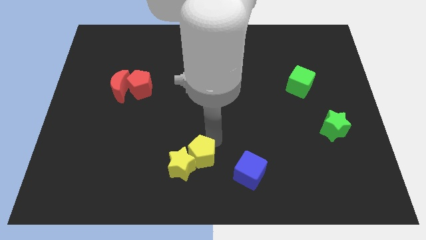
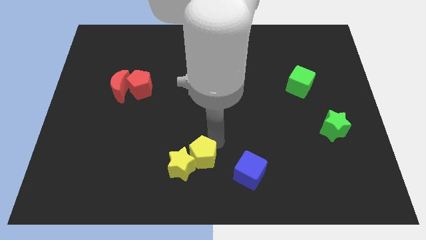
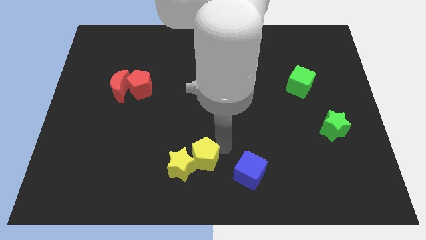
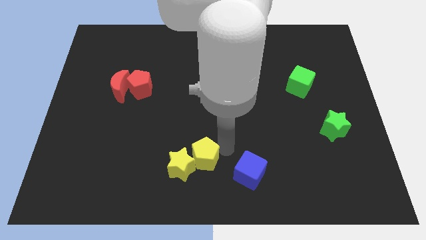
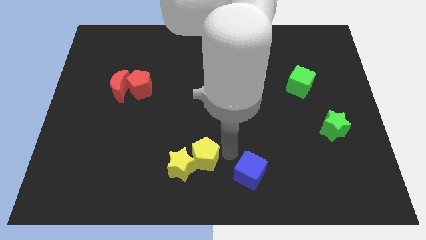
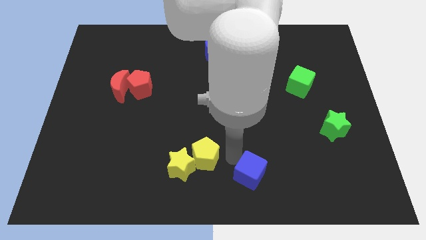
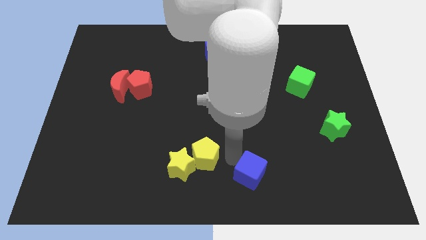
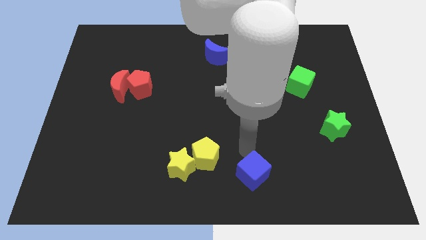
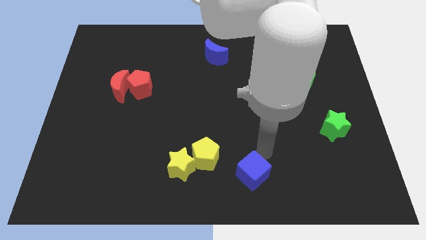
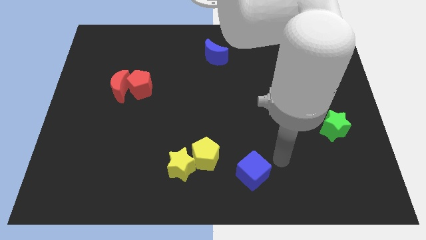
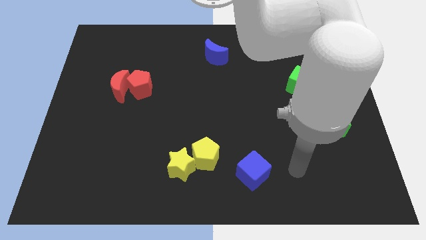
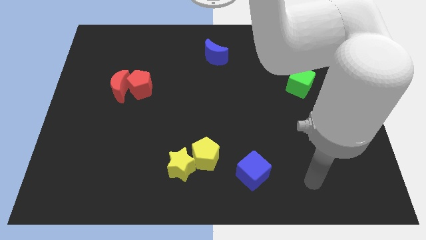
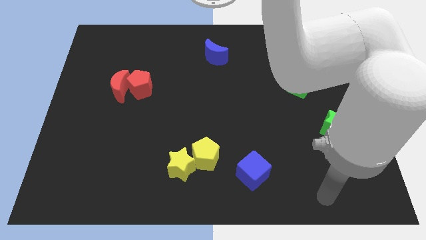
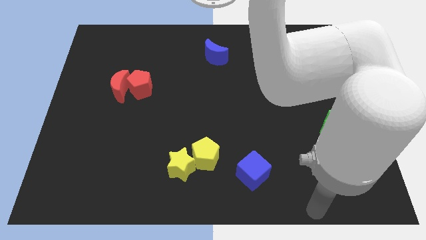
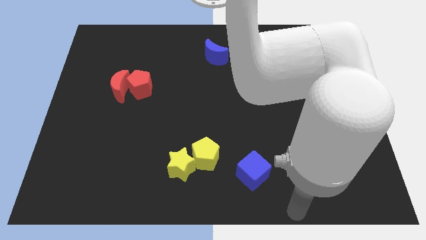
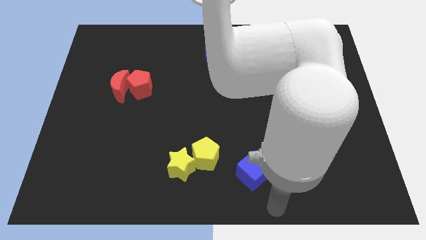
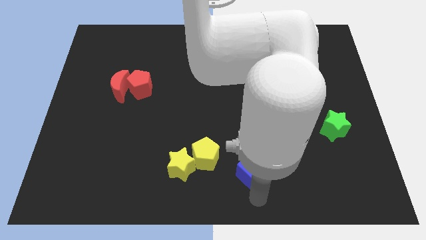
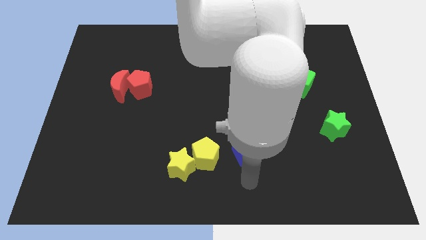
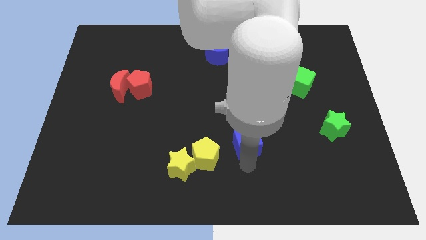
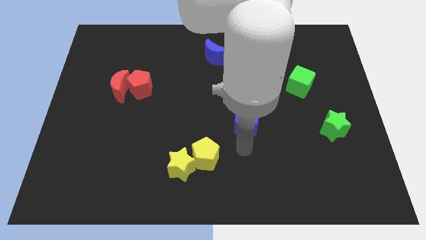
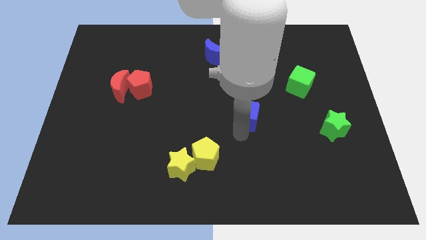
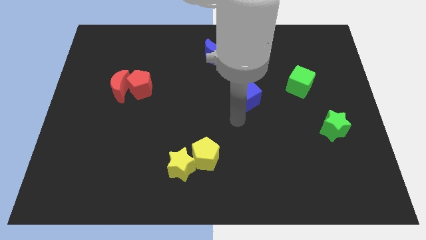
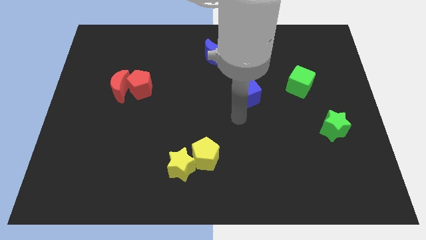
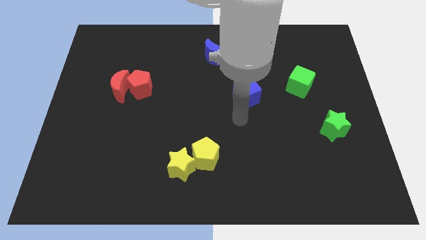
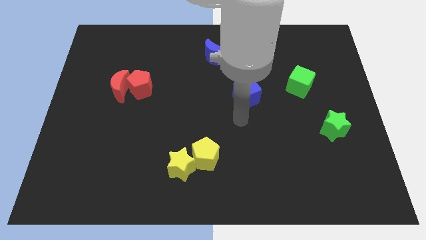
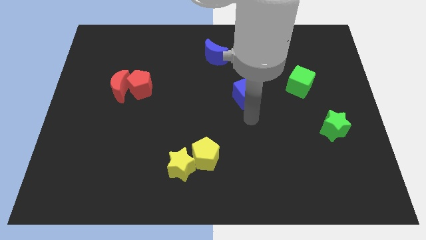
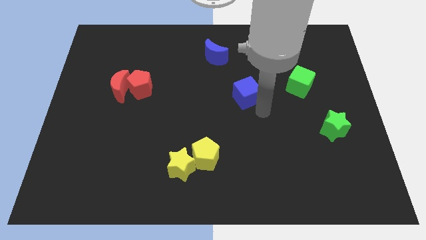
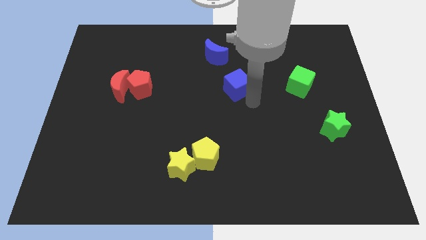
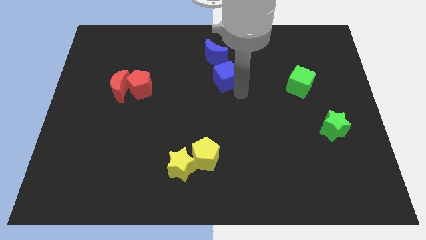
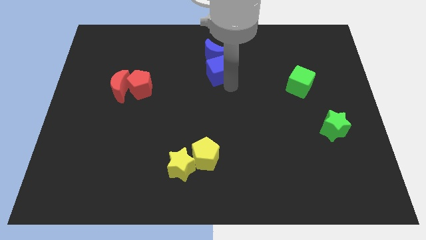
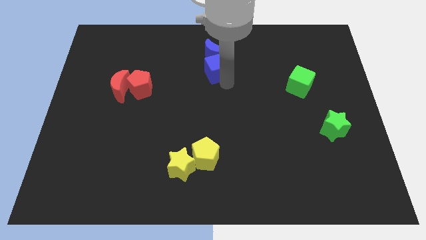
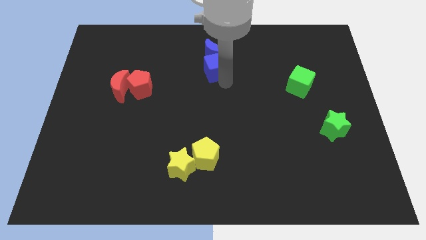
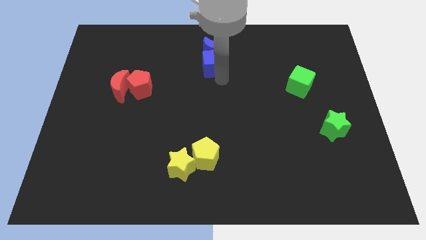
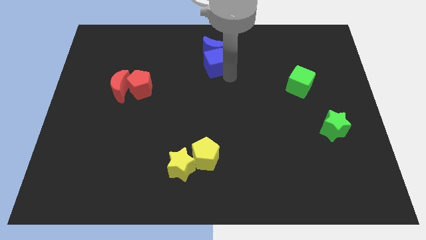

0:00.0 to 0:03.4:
push the blue cube to the bottom side of the blue crescent

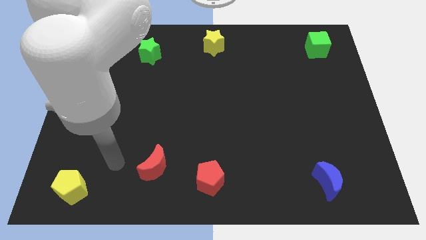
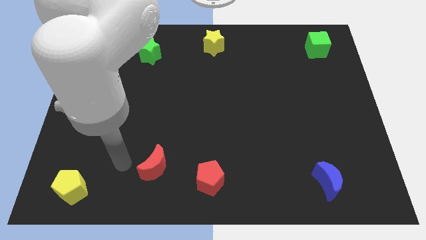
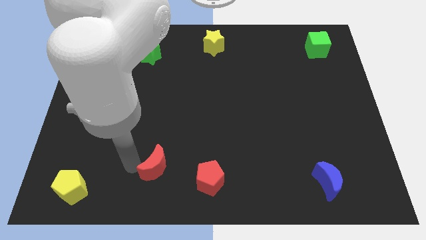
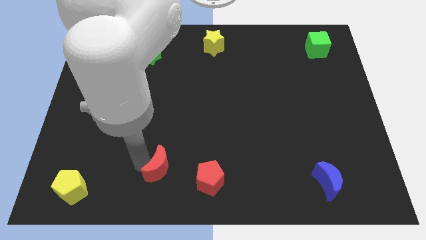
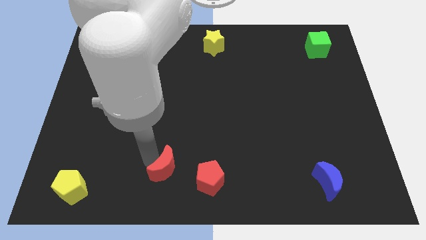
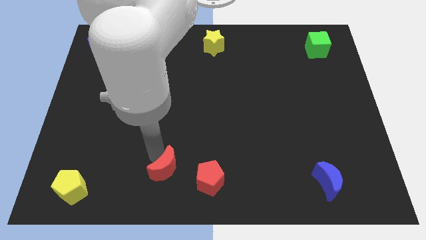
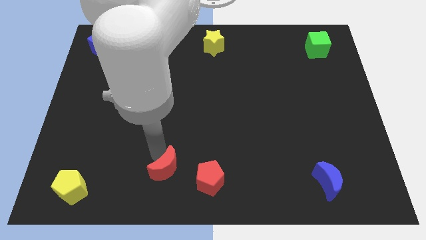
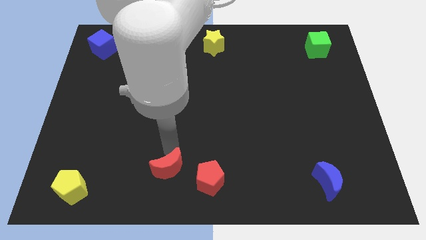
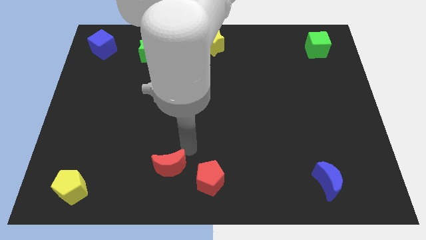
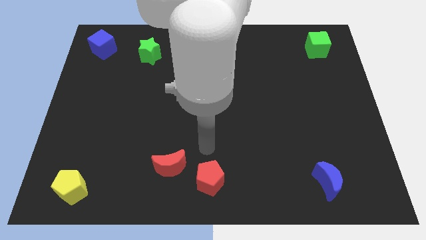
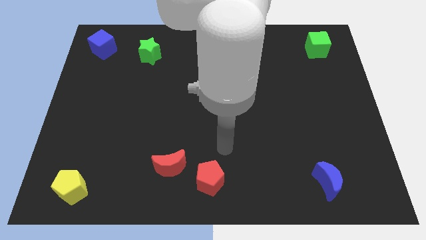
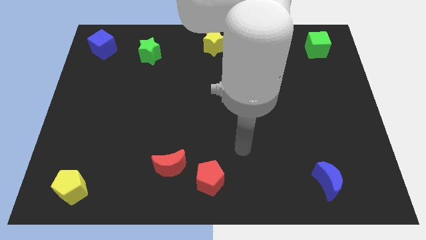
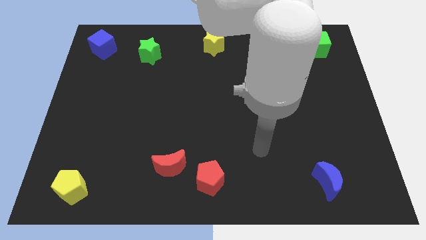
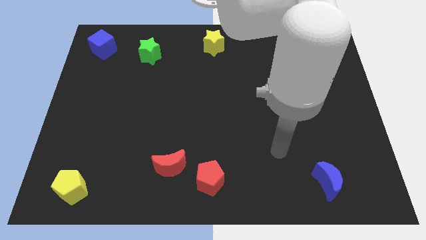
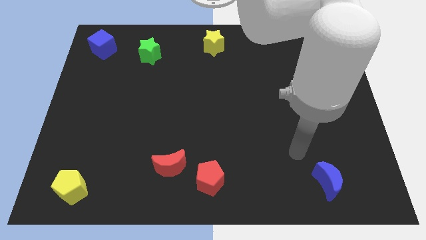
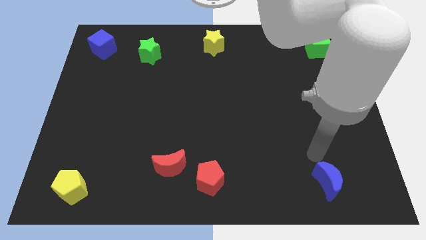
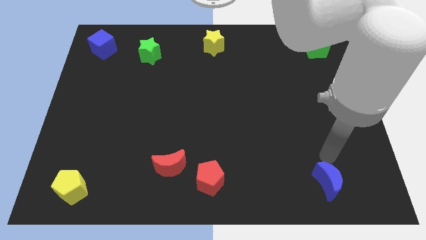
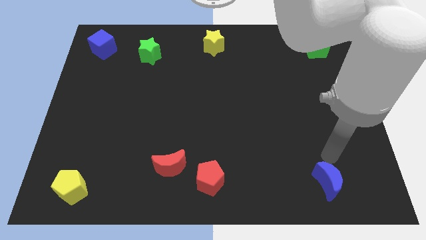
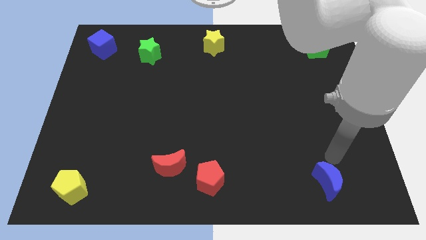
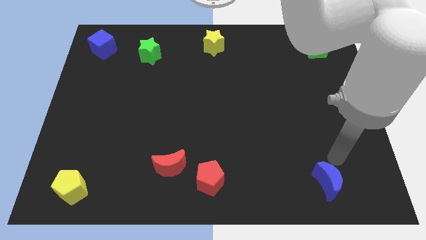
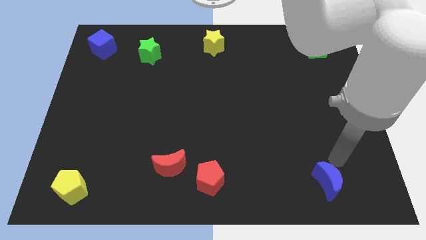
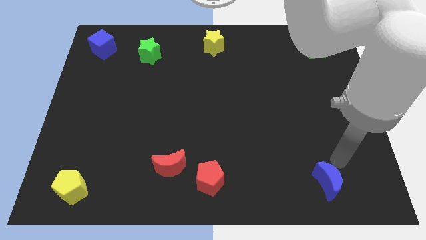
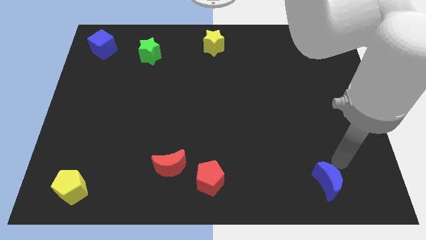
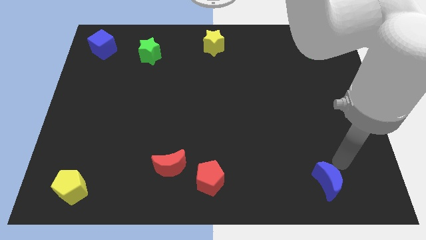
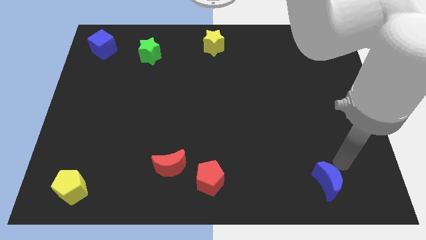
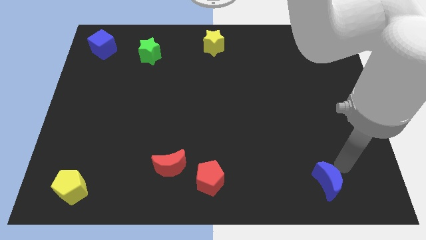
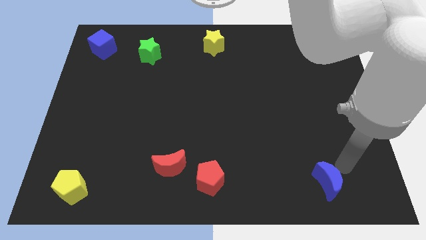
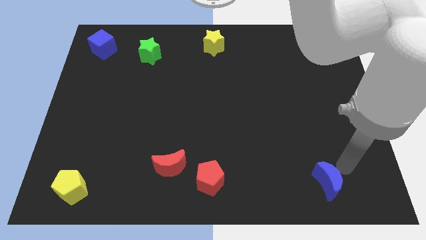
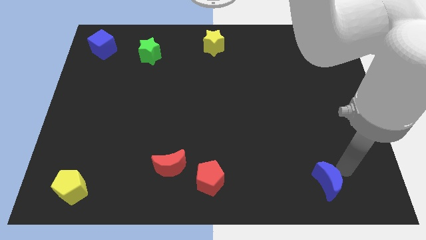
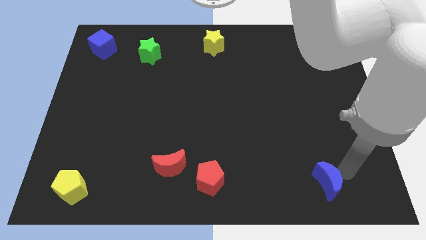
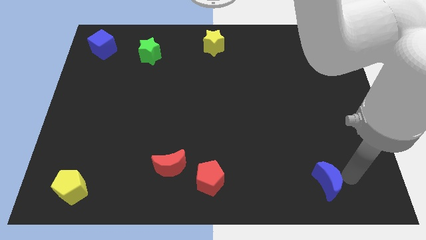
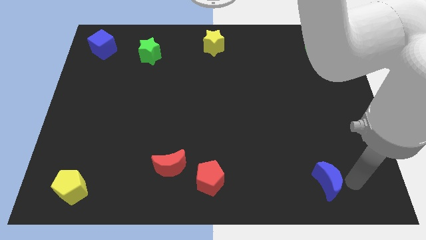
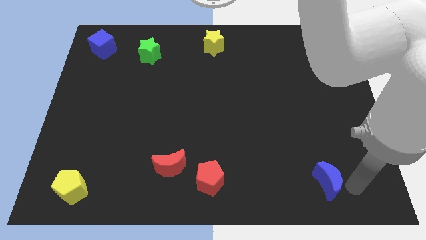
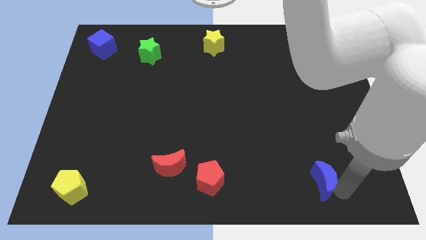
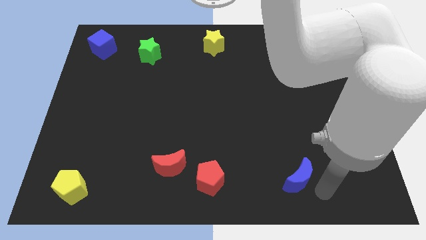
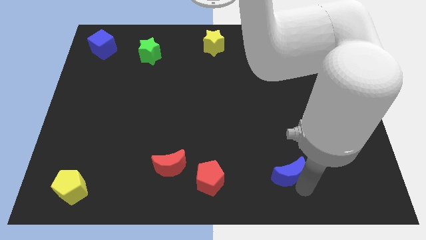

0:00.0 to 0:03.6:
push the blue moon up slightly

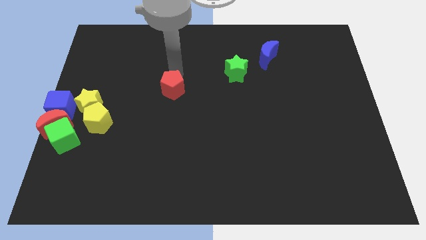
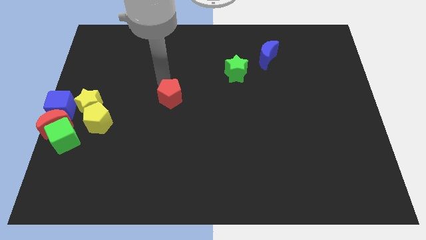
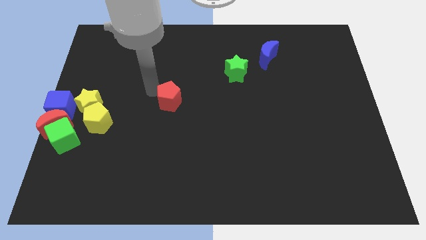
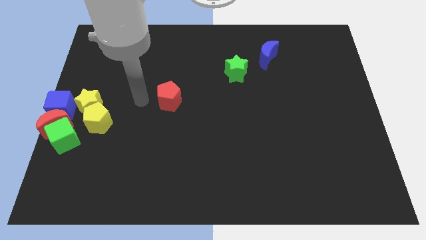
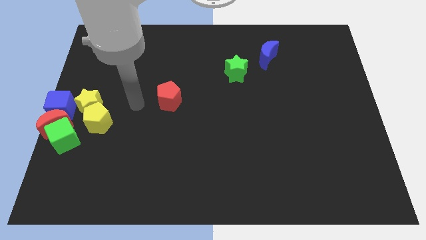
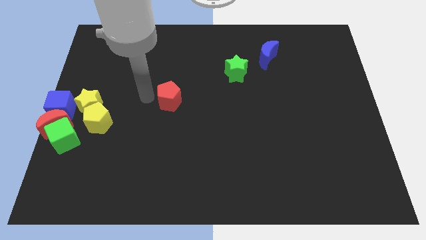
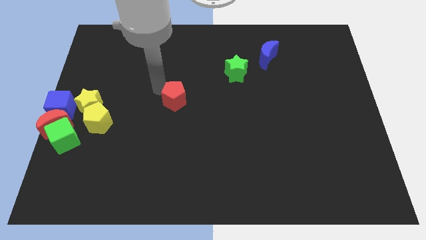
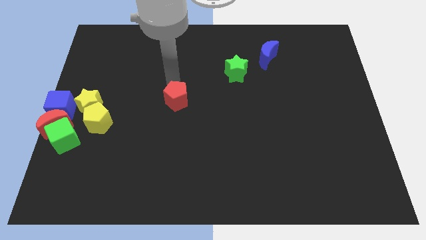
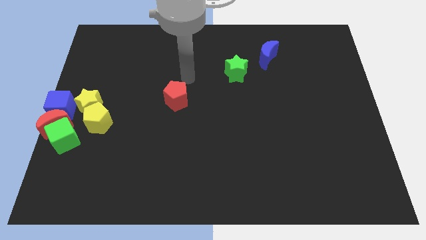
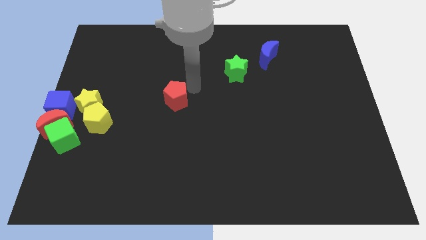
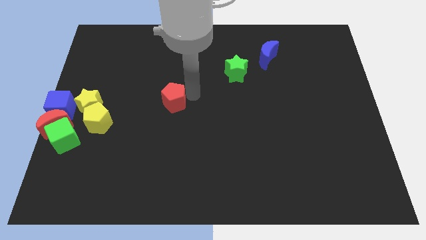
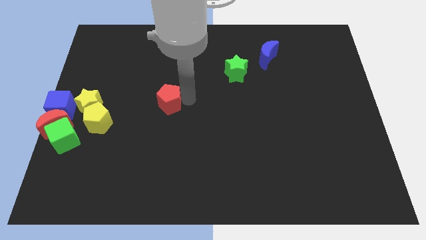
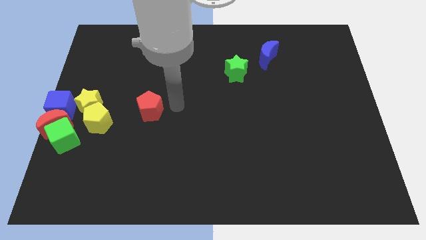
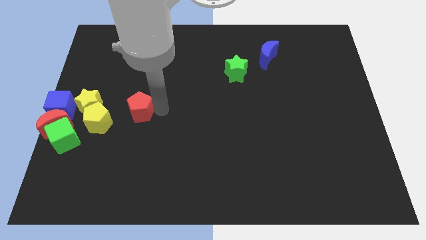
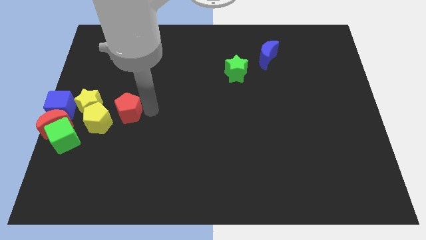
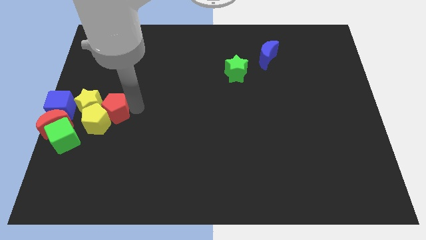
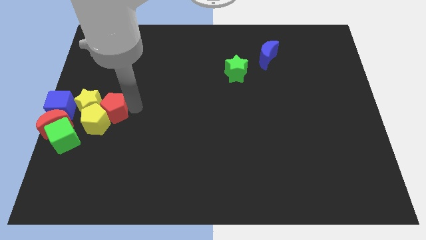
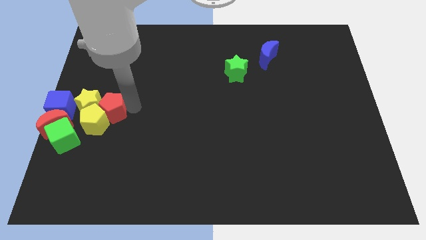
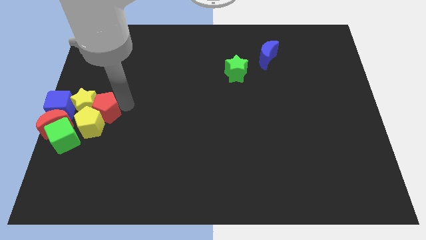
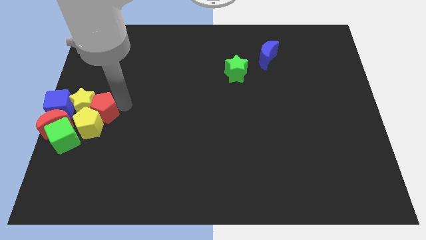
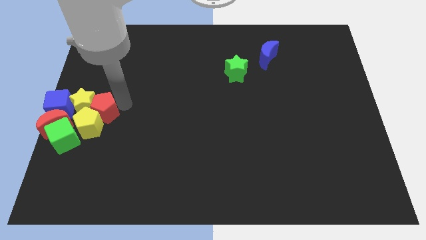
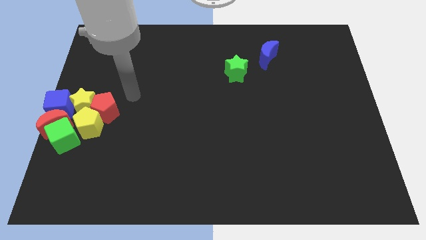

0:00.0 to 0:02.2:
push the red pentagon into the yellow star and yellow pentagon
